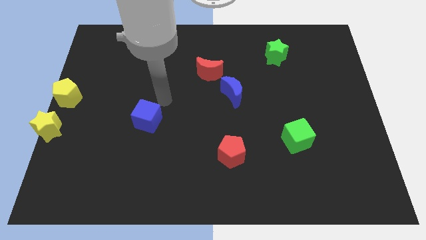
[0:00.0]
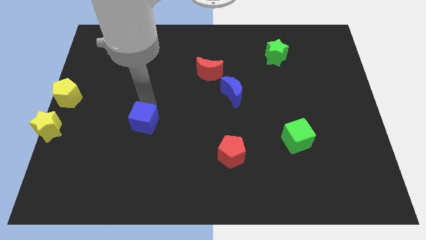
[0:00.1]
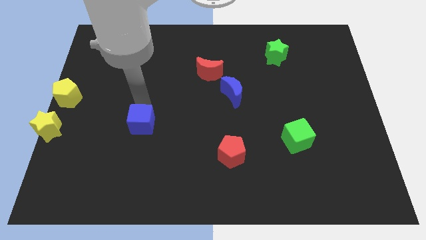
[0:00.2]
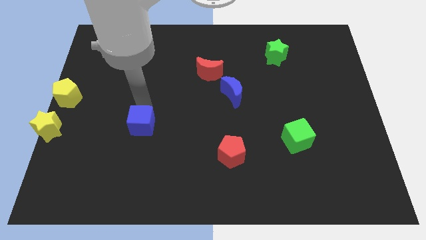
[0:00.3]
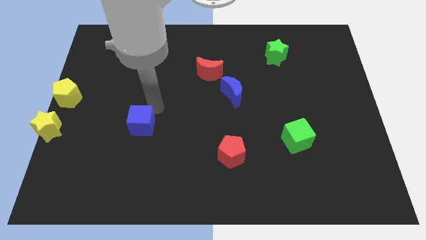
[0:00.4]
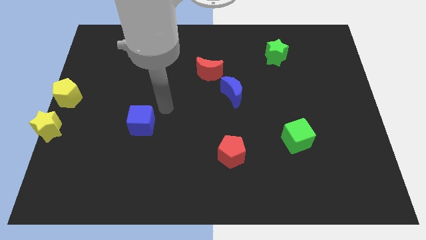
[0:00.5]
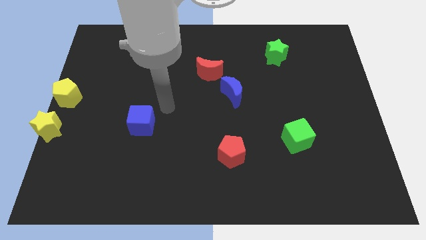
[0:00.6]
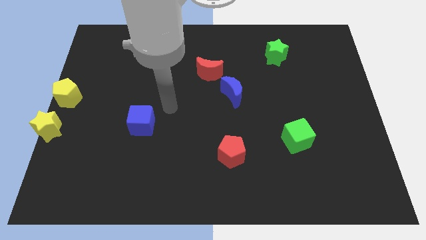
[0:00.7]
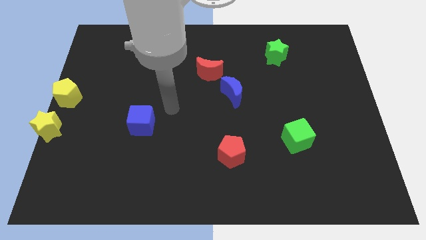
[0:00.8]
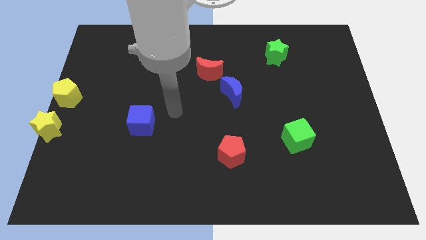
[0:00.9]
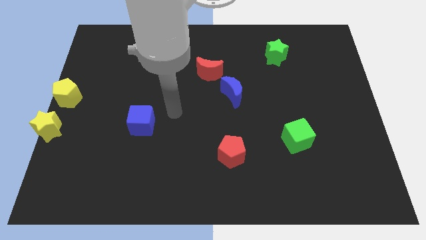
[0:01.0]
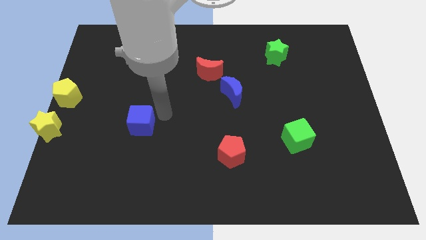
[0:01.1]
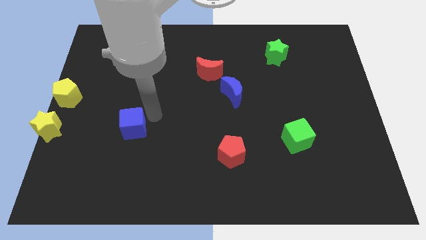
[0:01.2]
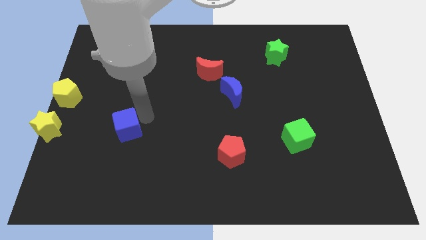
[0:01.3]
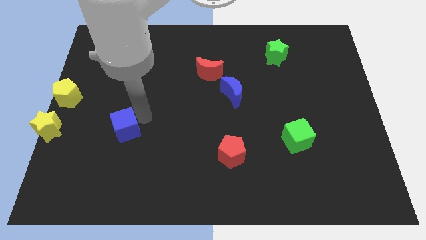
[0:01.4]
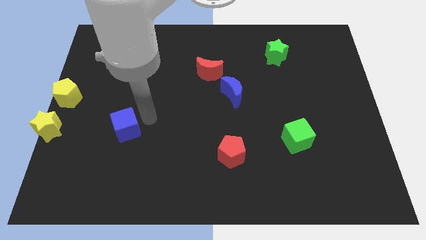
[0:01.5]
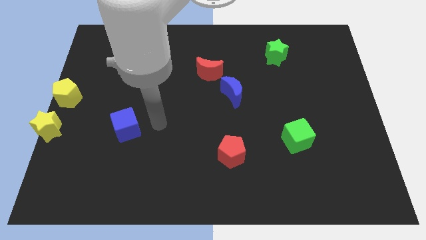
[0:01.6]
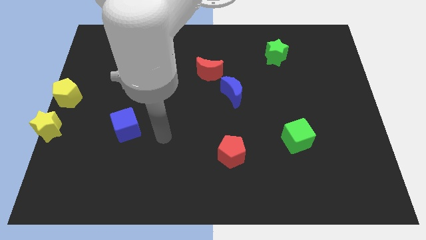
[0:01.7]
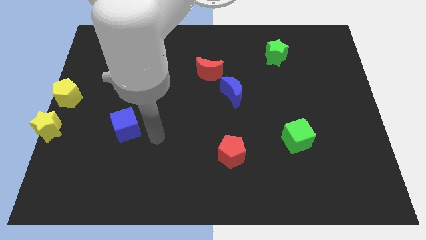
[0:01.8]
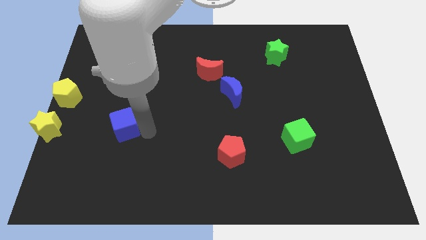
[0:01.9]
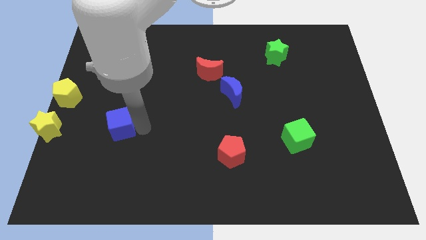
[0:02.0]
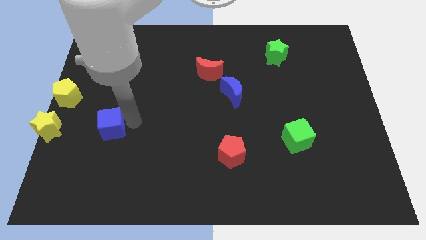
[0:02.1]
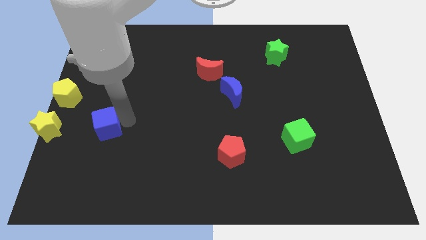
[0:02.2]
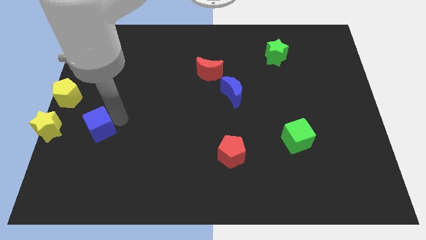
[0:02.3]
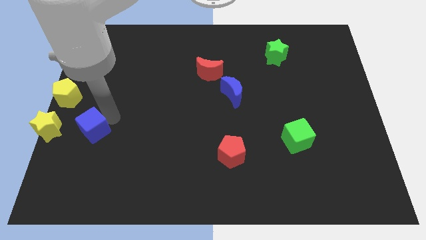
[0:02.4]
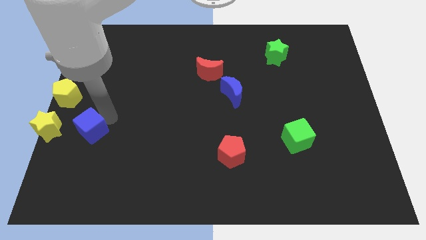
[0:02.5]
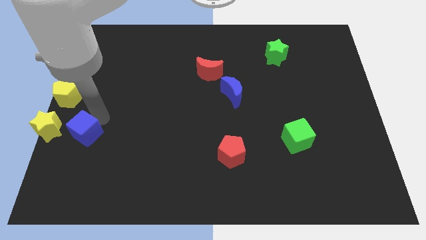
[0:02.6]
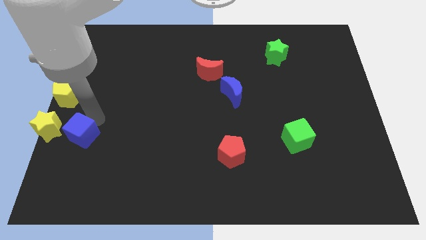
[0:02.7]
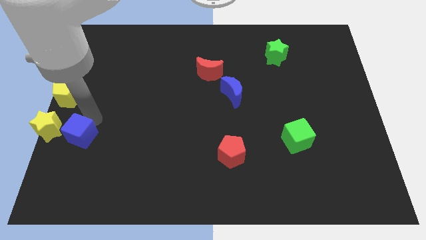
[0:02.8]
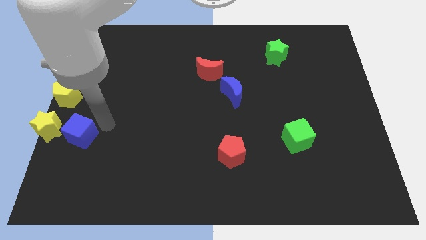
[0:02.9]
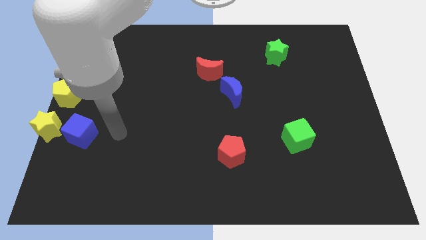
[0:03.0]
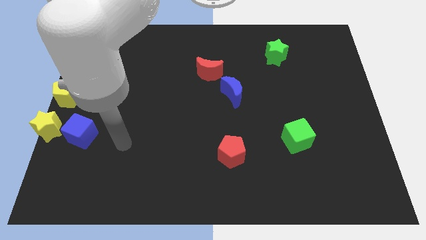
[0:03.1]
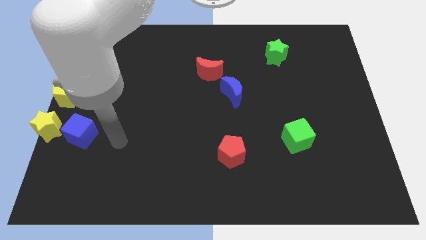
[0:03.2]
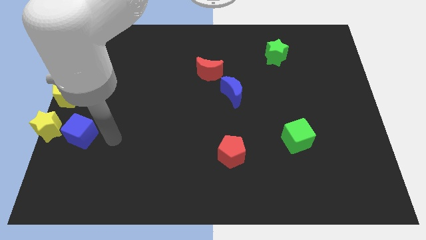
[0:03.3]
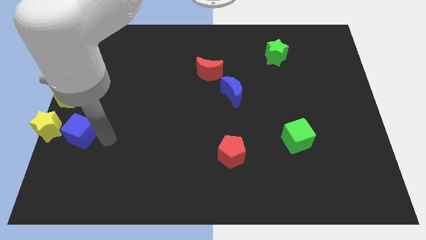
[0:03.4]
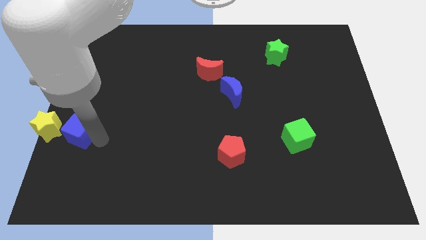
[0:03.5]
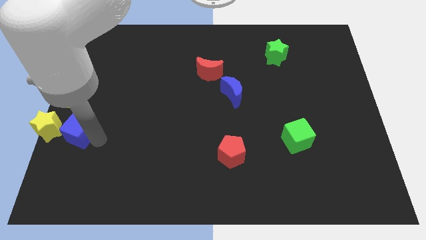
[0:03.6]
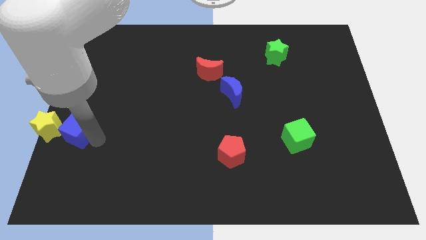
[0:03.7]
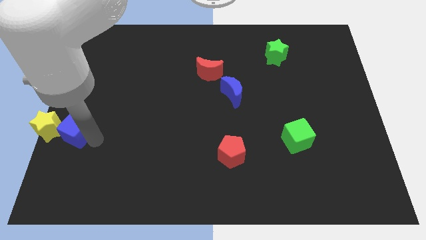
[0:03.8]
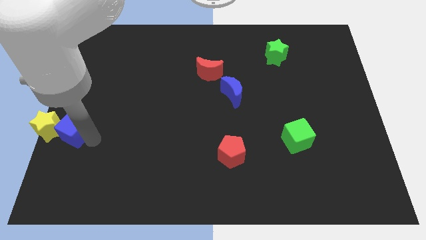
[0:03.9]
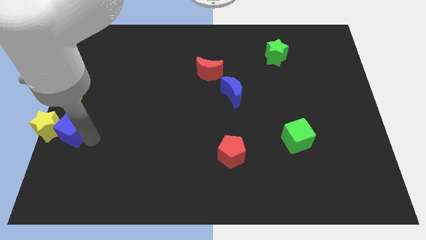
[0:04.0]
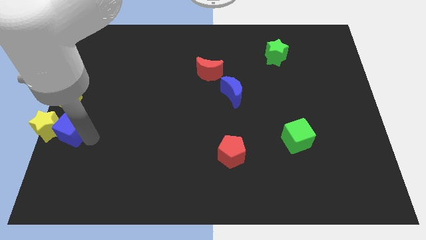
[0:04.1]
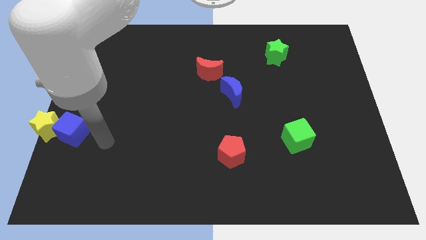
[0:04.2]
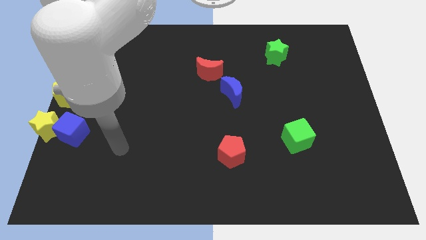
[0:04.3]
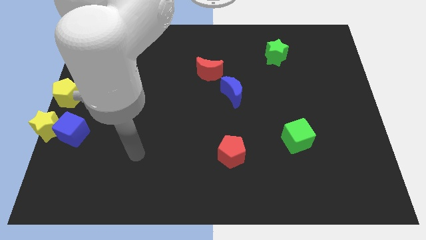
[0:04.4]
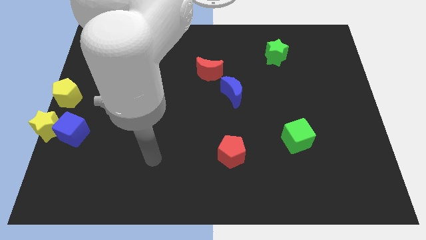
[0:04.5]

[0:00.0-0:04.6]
push the blue cube to the right side of the yellow star

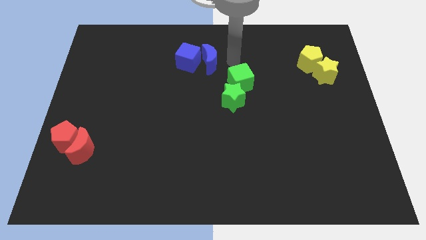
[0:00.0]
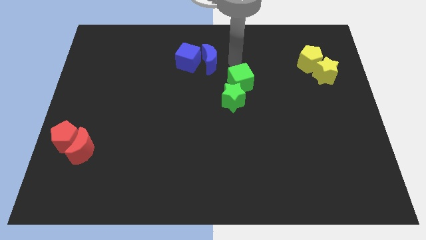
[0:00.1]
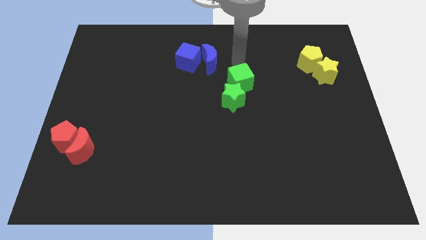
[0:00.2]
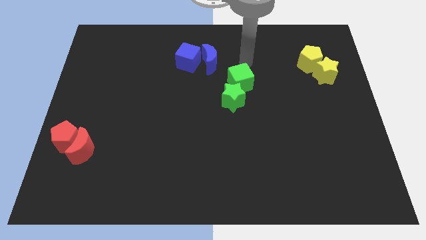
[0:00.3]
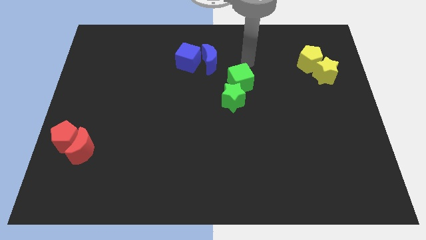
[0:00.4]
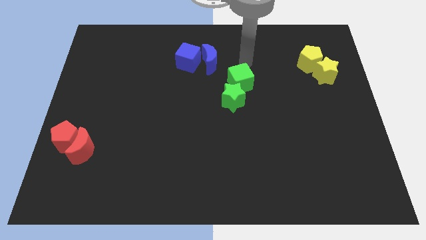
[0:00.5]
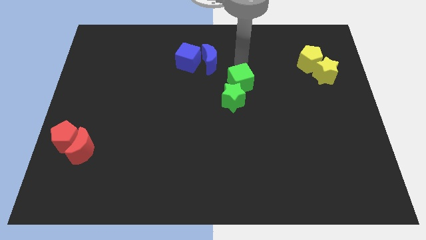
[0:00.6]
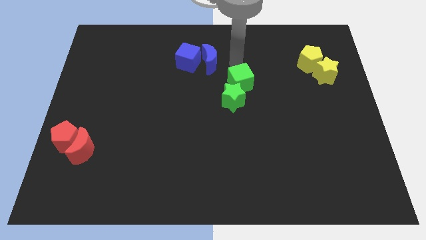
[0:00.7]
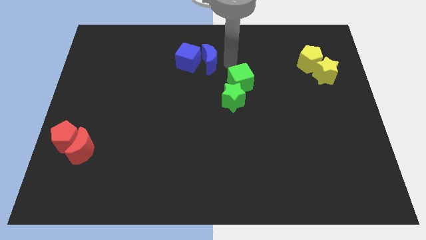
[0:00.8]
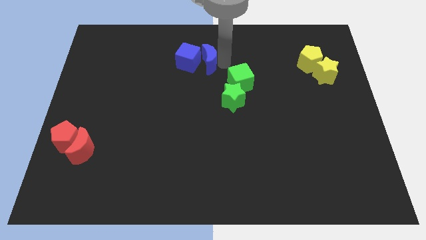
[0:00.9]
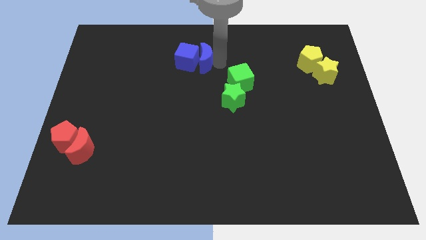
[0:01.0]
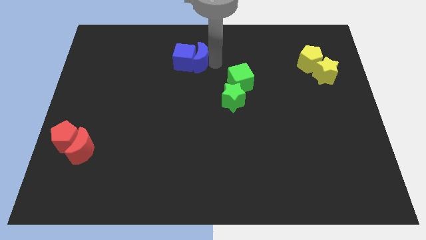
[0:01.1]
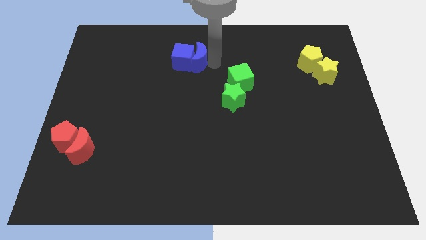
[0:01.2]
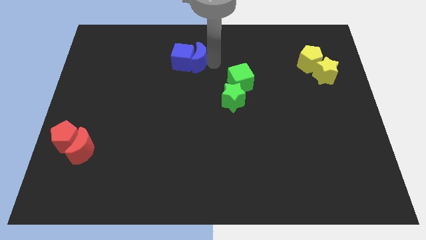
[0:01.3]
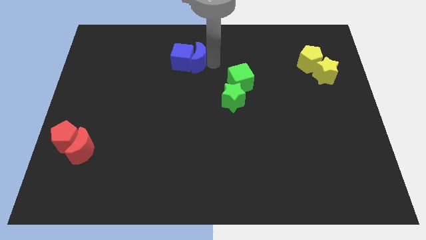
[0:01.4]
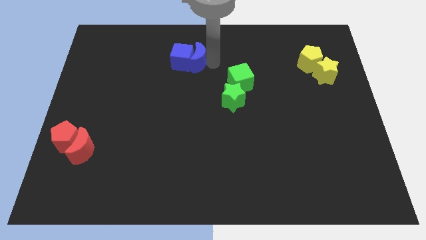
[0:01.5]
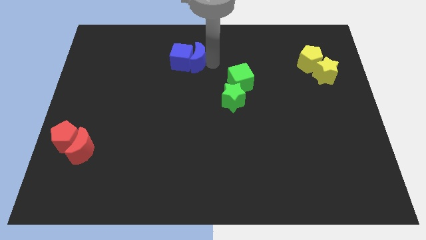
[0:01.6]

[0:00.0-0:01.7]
push the blue crescent into the blue cube

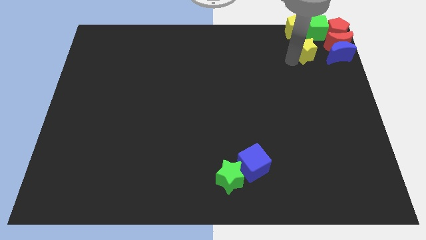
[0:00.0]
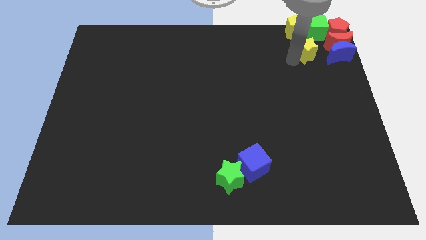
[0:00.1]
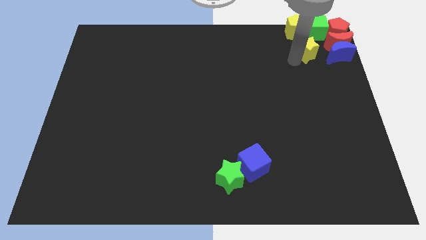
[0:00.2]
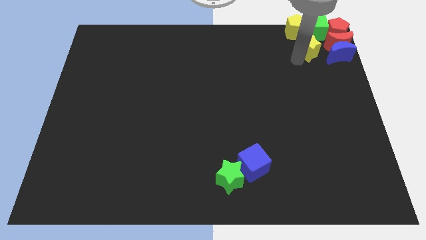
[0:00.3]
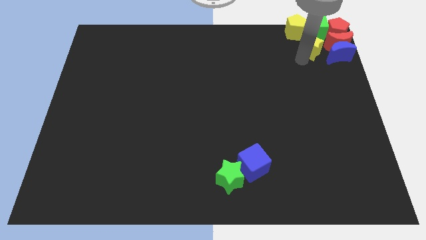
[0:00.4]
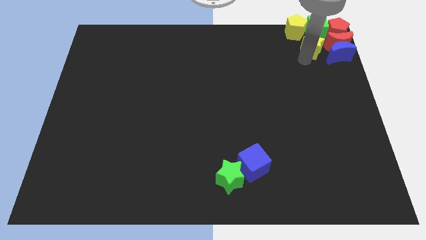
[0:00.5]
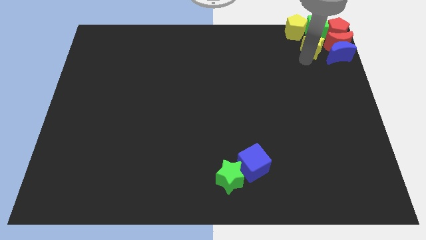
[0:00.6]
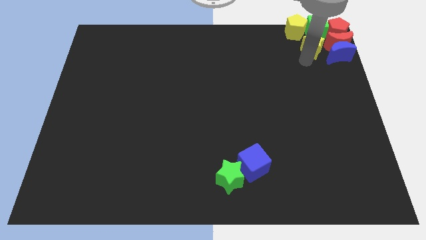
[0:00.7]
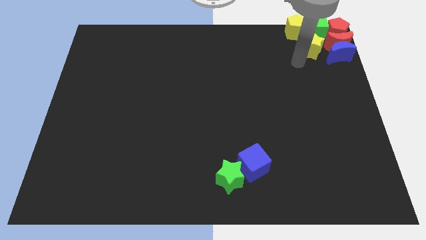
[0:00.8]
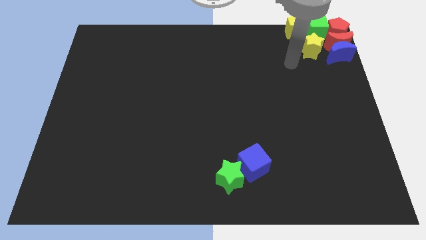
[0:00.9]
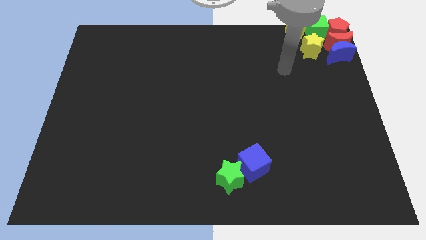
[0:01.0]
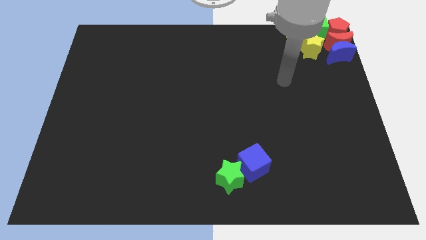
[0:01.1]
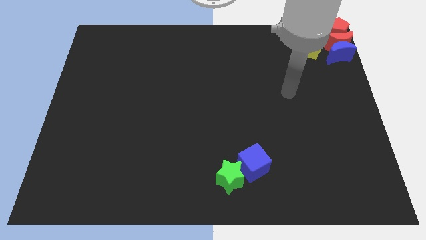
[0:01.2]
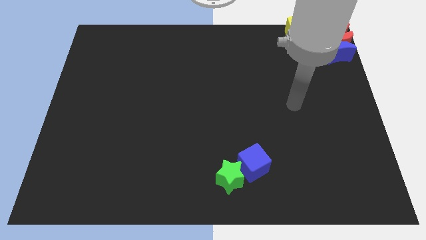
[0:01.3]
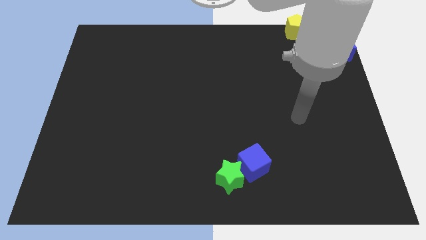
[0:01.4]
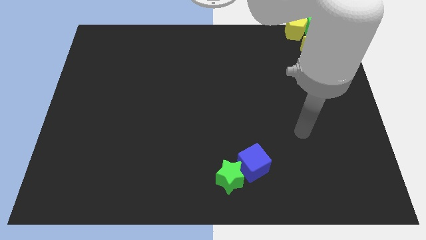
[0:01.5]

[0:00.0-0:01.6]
put the yellow star below the green cube

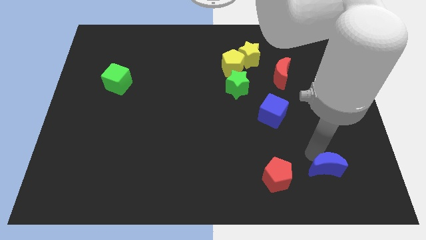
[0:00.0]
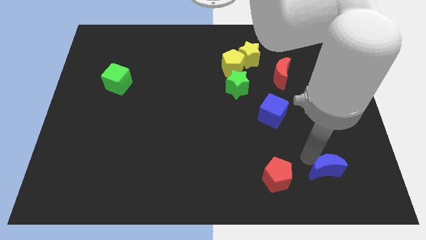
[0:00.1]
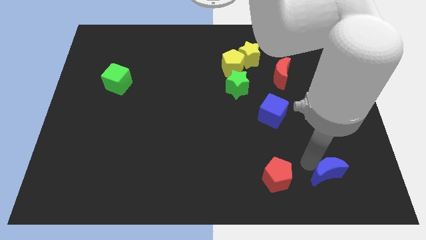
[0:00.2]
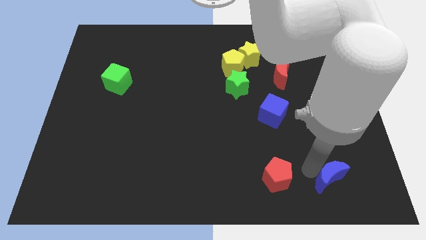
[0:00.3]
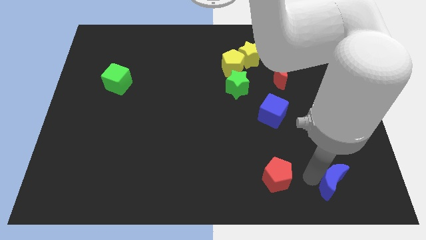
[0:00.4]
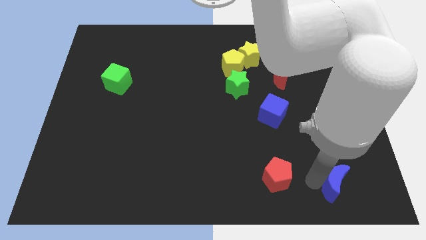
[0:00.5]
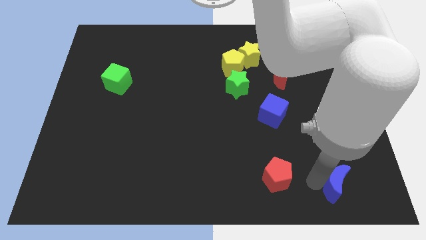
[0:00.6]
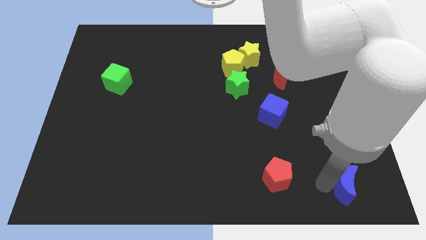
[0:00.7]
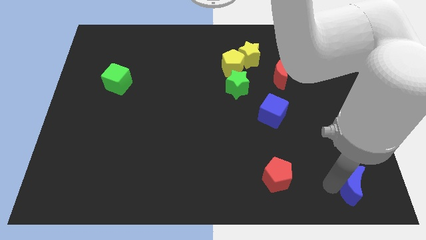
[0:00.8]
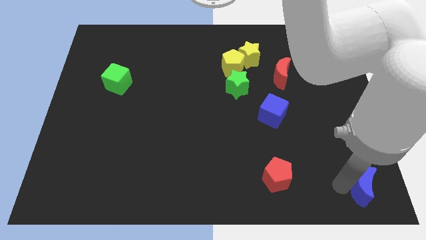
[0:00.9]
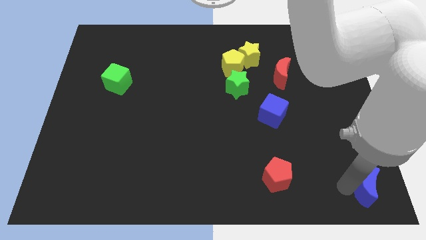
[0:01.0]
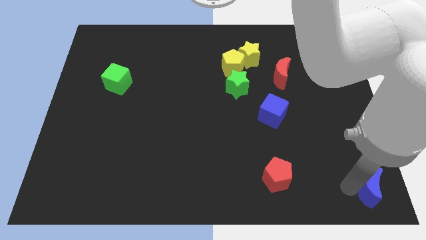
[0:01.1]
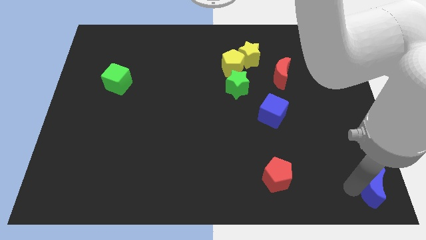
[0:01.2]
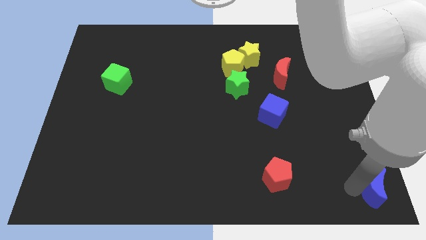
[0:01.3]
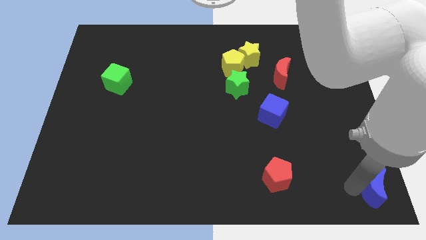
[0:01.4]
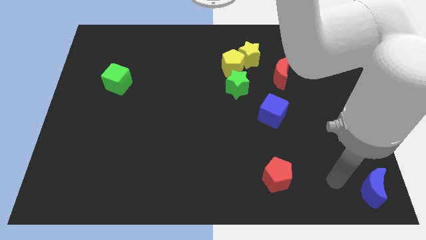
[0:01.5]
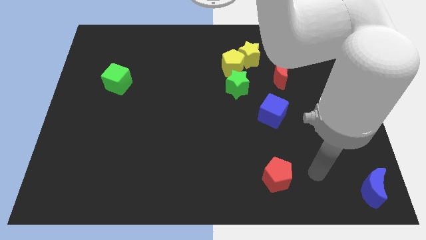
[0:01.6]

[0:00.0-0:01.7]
push the blue moon towards the bottom right corner of the board
